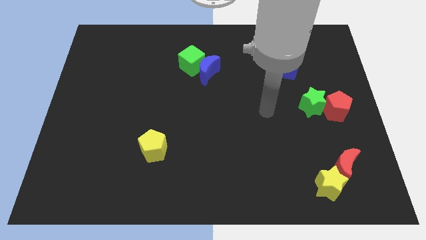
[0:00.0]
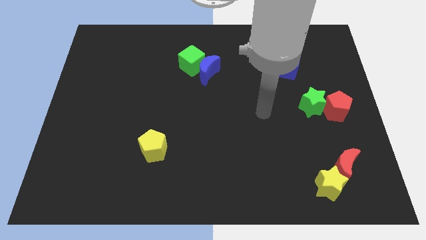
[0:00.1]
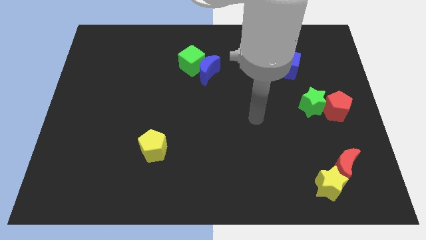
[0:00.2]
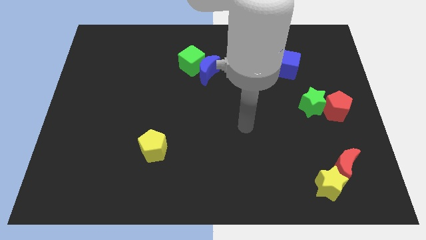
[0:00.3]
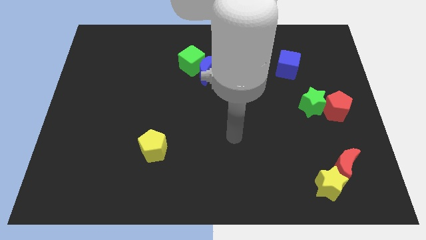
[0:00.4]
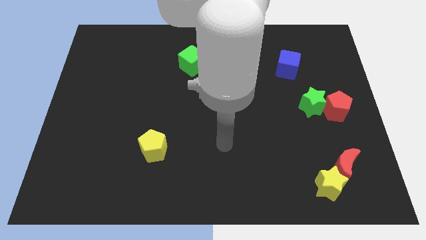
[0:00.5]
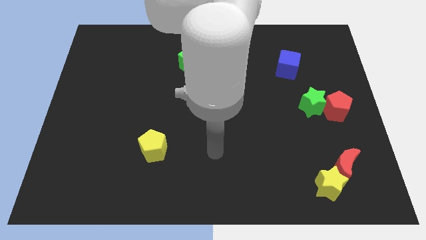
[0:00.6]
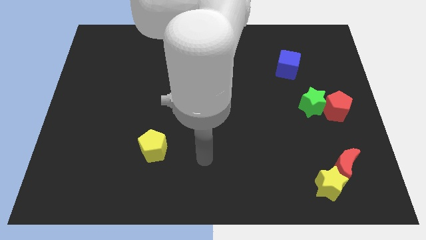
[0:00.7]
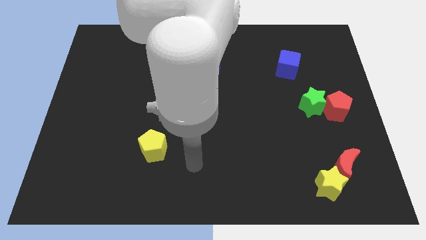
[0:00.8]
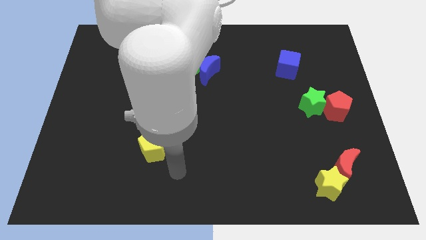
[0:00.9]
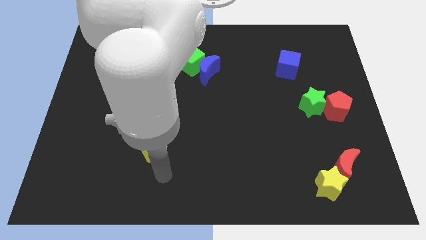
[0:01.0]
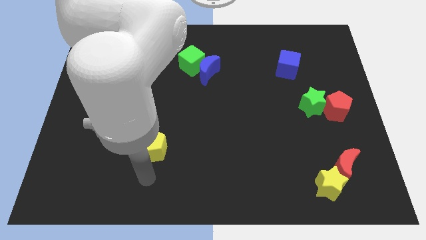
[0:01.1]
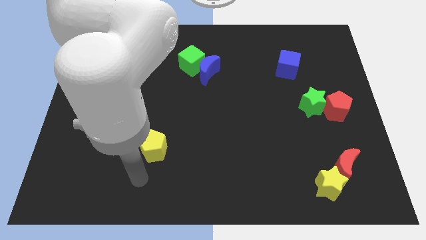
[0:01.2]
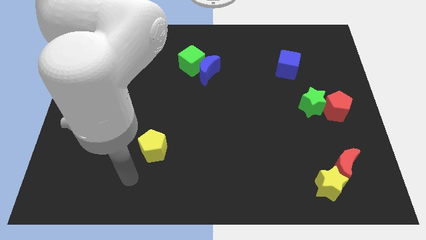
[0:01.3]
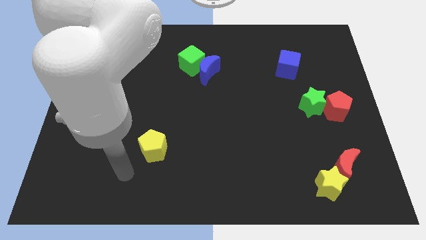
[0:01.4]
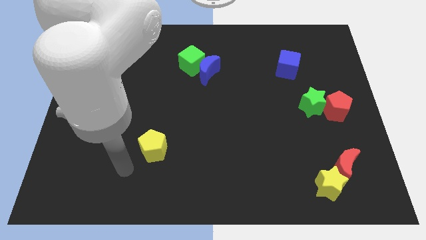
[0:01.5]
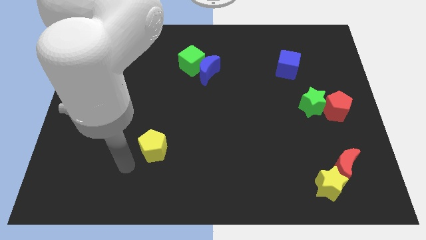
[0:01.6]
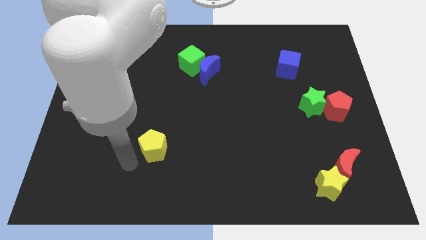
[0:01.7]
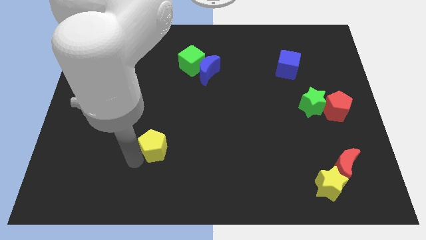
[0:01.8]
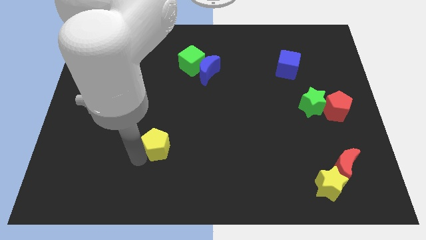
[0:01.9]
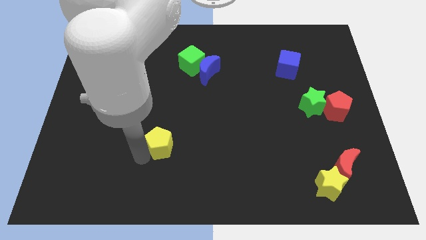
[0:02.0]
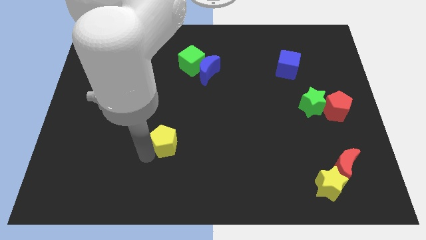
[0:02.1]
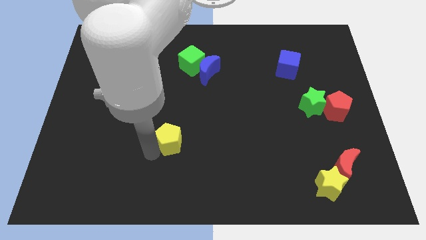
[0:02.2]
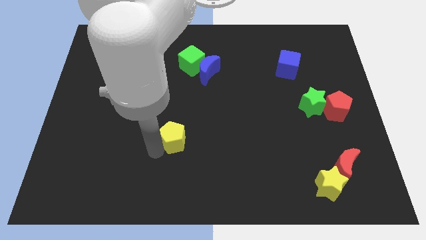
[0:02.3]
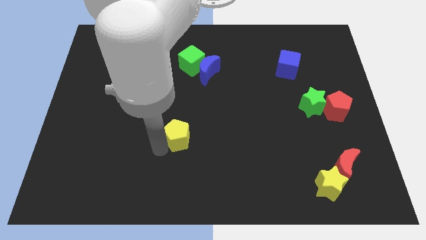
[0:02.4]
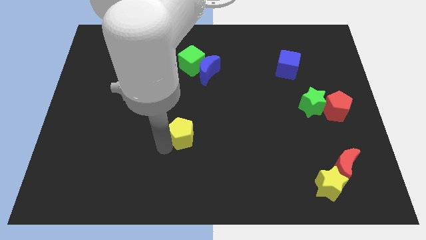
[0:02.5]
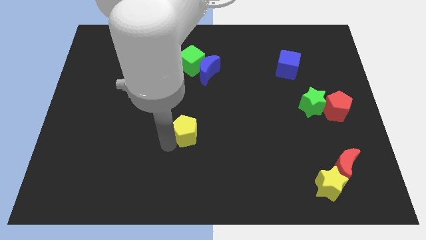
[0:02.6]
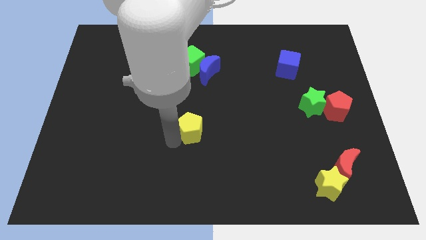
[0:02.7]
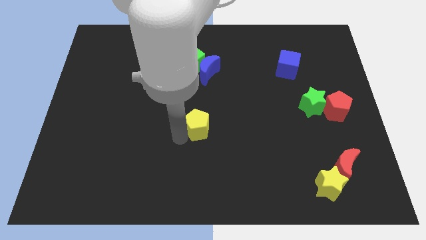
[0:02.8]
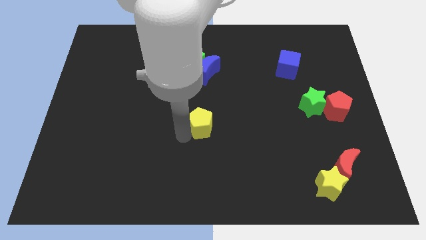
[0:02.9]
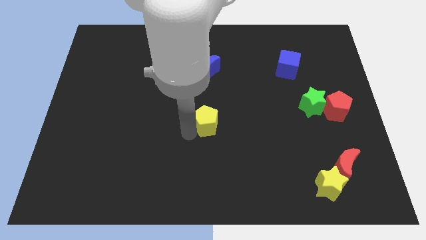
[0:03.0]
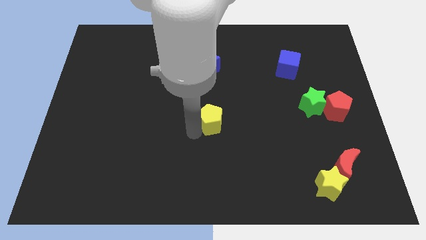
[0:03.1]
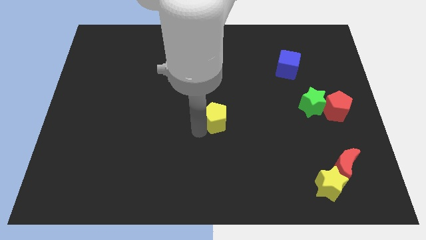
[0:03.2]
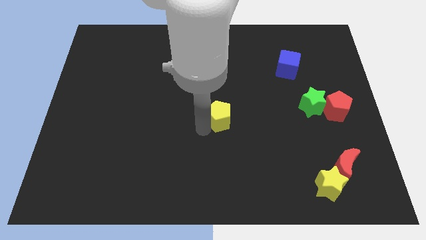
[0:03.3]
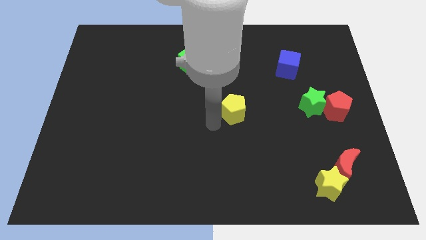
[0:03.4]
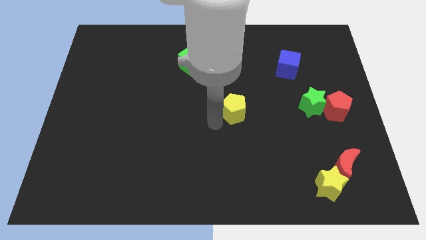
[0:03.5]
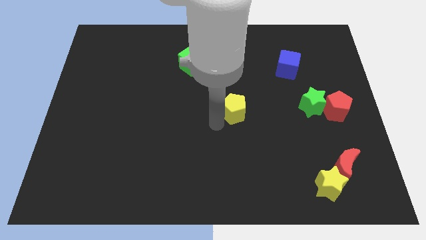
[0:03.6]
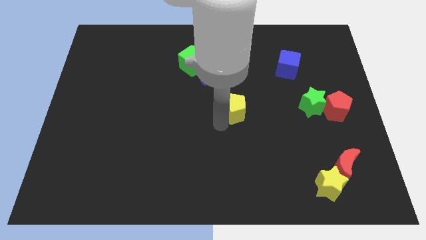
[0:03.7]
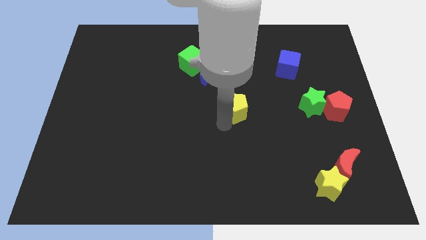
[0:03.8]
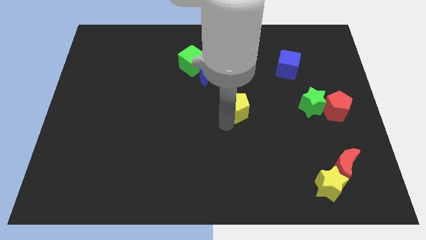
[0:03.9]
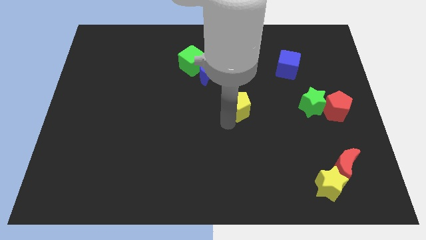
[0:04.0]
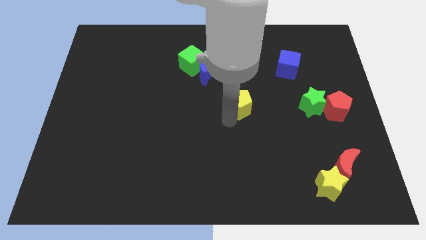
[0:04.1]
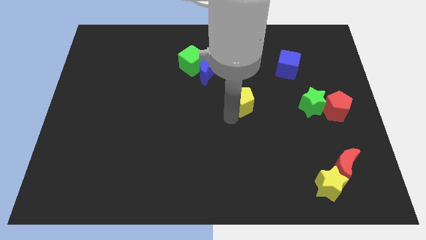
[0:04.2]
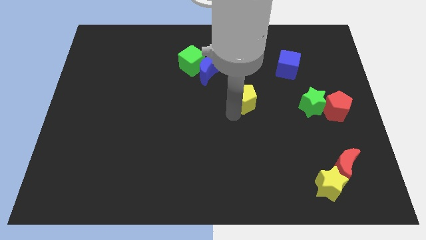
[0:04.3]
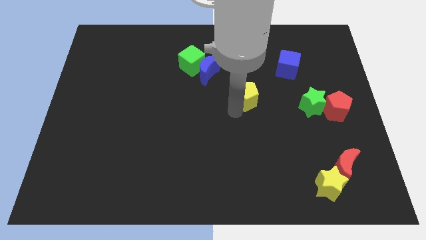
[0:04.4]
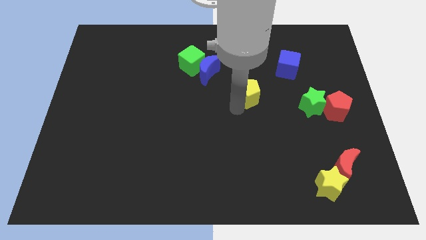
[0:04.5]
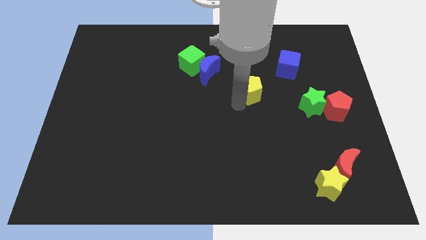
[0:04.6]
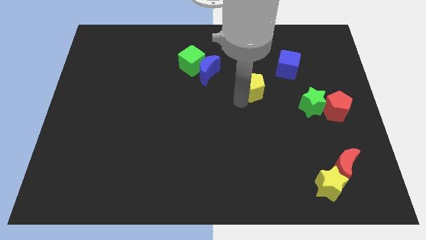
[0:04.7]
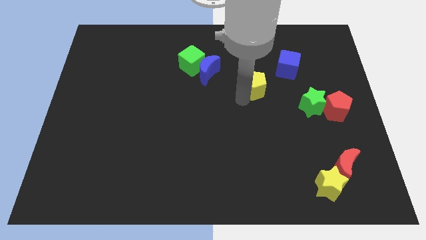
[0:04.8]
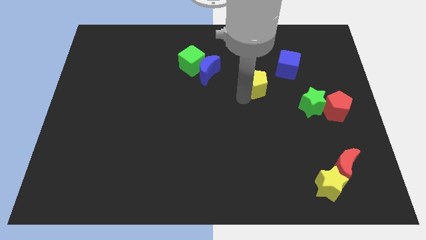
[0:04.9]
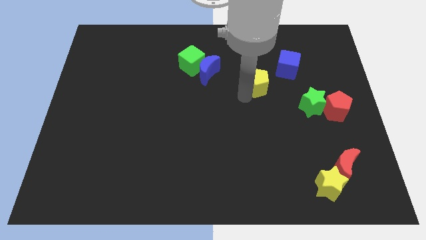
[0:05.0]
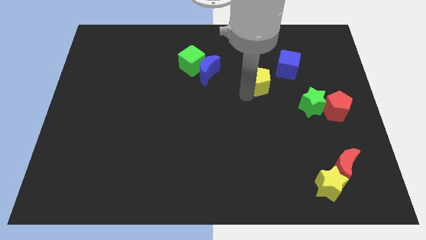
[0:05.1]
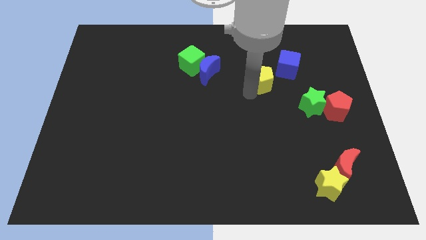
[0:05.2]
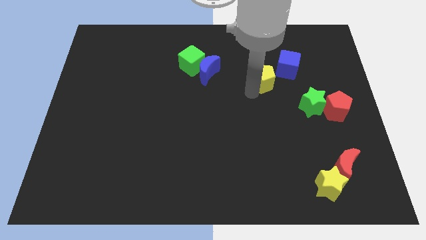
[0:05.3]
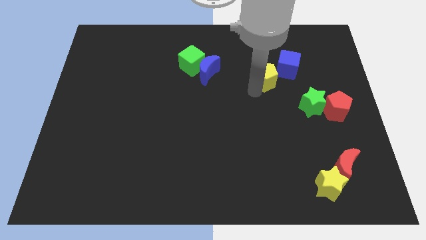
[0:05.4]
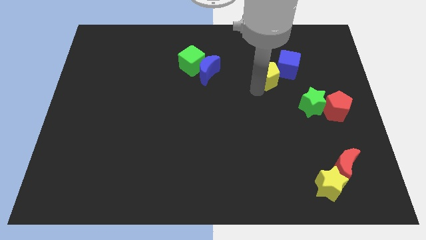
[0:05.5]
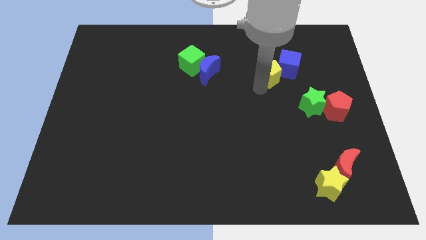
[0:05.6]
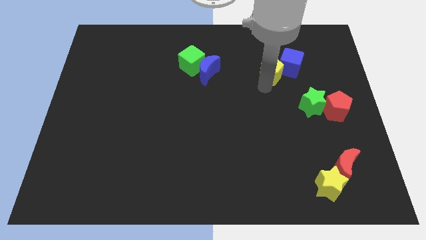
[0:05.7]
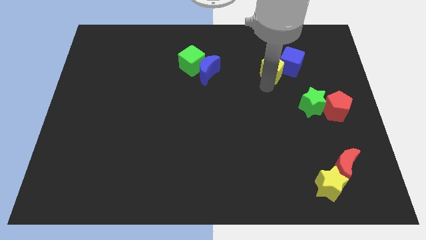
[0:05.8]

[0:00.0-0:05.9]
move the yellow pentagon to the blue cube

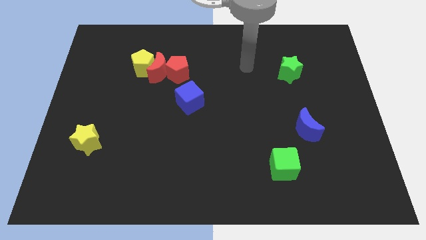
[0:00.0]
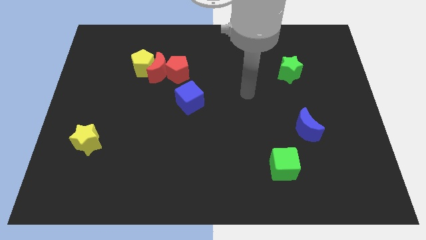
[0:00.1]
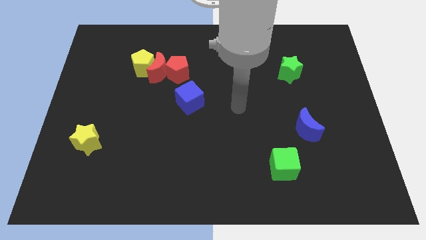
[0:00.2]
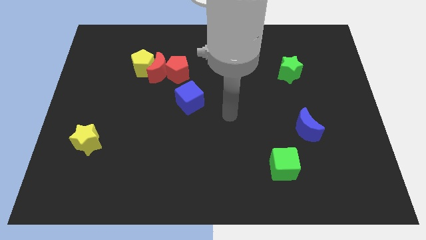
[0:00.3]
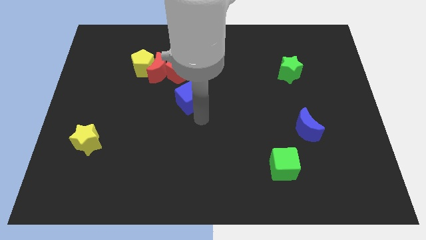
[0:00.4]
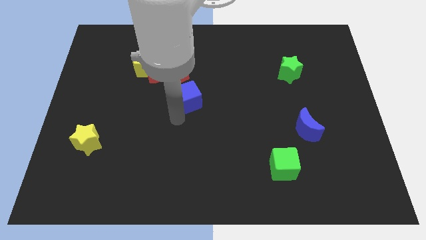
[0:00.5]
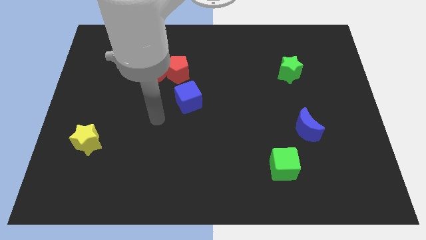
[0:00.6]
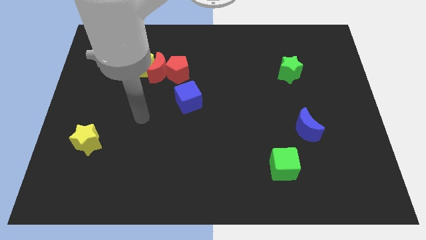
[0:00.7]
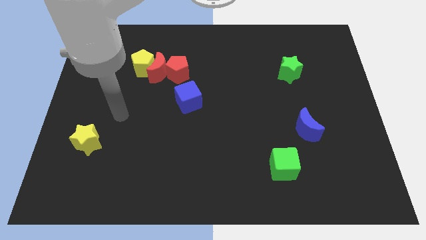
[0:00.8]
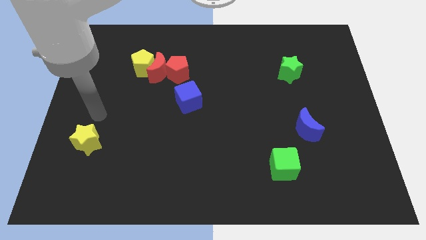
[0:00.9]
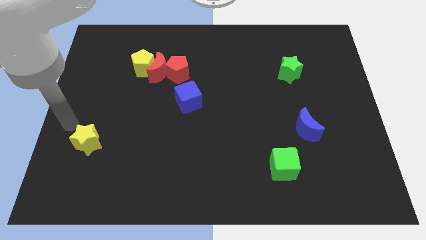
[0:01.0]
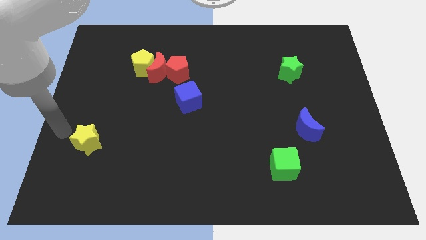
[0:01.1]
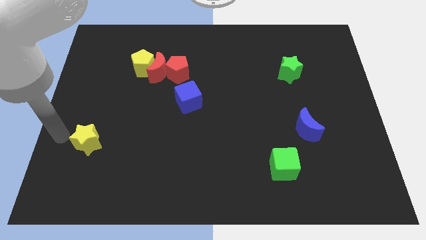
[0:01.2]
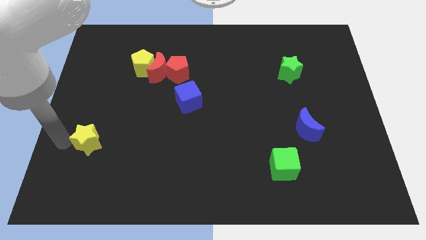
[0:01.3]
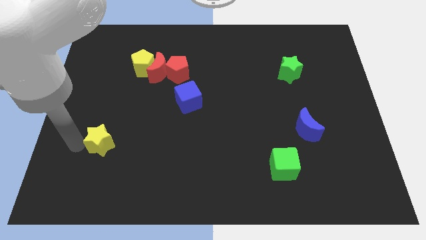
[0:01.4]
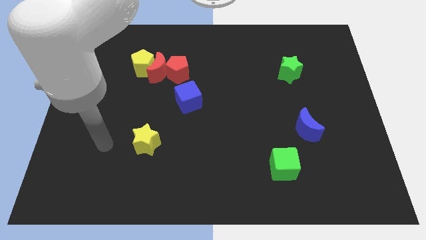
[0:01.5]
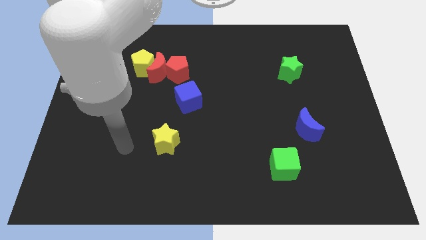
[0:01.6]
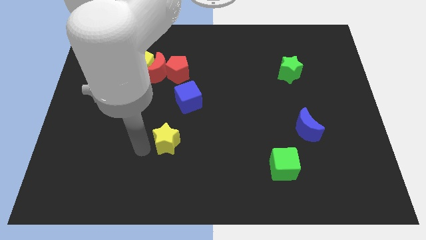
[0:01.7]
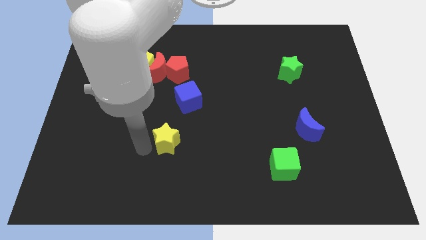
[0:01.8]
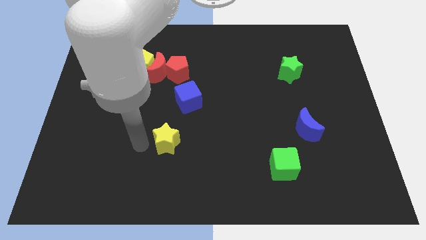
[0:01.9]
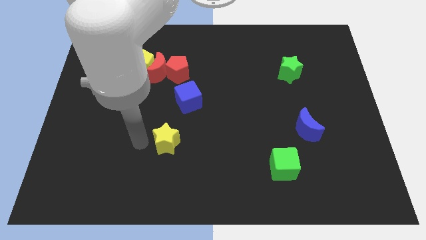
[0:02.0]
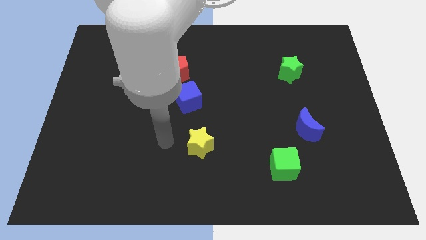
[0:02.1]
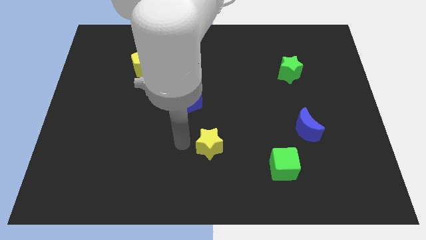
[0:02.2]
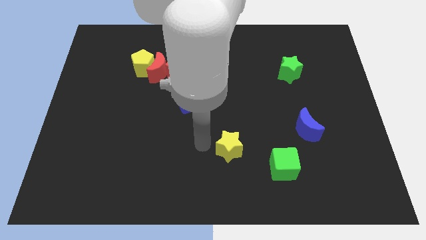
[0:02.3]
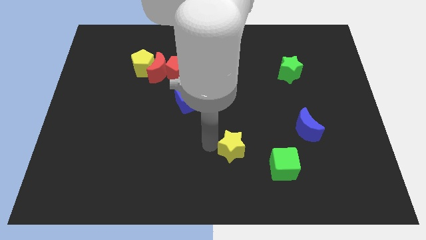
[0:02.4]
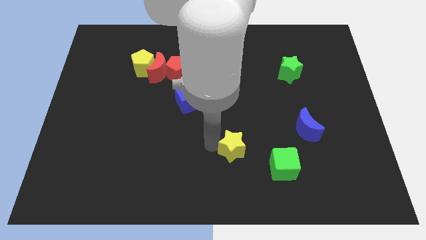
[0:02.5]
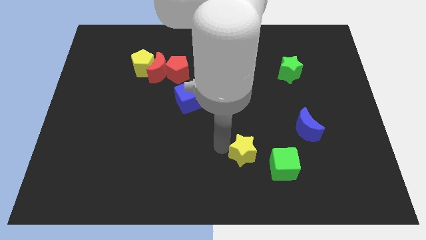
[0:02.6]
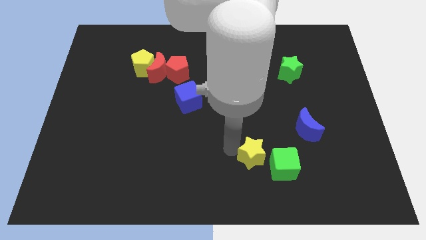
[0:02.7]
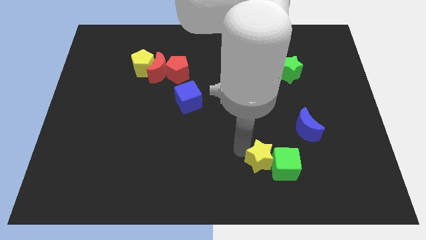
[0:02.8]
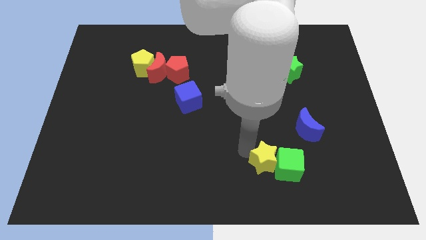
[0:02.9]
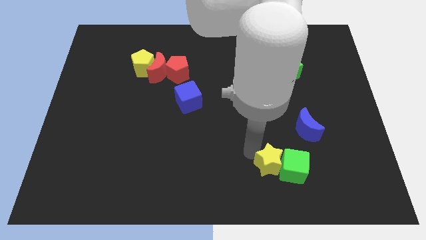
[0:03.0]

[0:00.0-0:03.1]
push the yellow star next to the green cube
